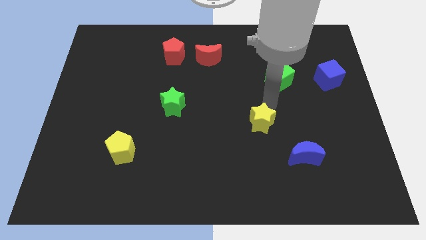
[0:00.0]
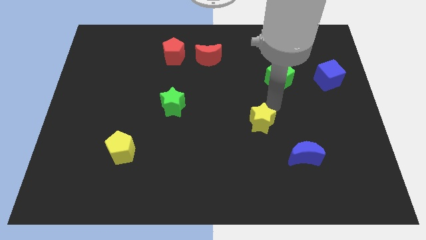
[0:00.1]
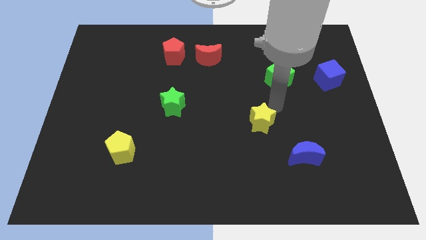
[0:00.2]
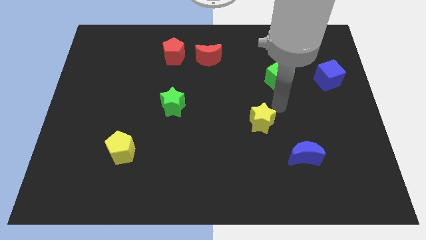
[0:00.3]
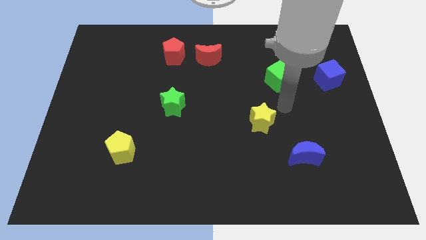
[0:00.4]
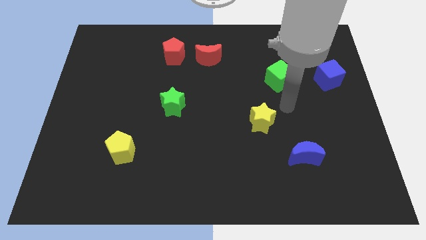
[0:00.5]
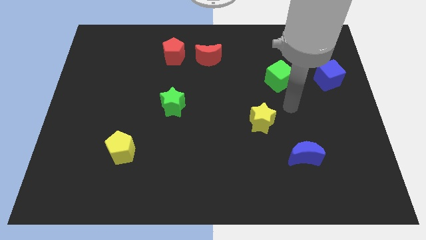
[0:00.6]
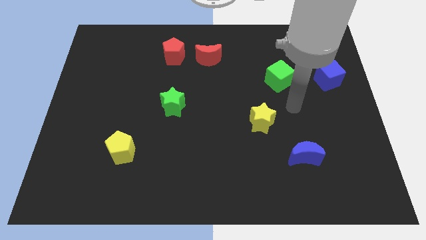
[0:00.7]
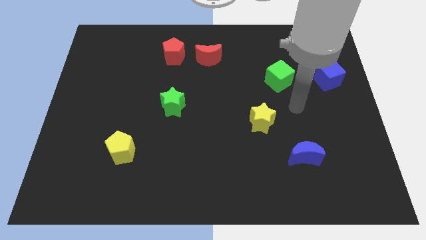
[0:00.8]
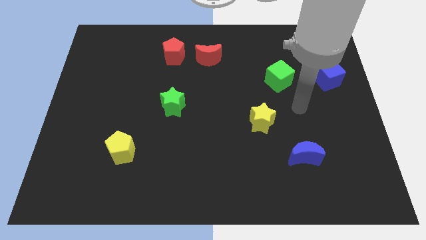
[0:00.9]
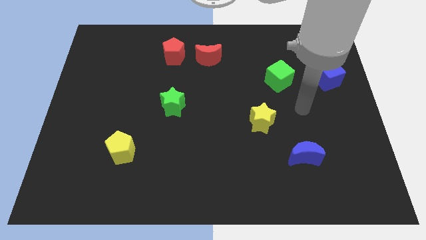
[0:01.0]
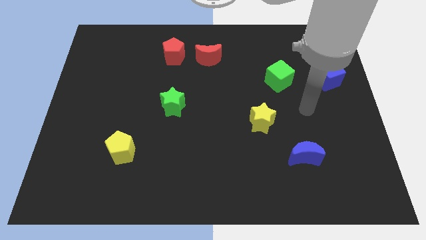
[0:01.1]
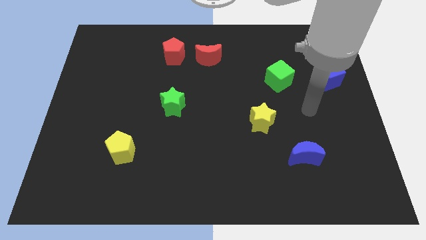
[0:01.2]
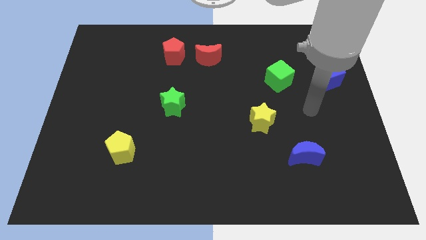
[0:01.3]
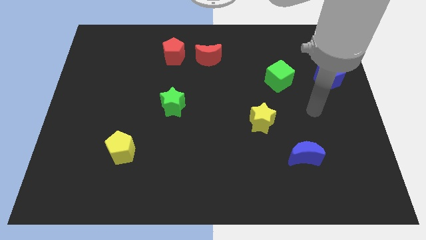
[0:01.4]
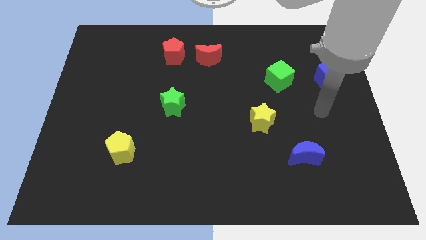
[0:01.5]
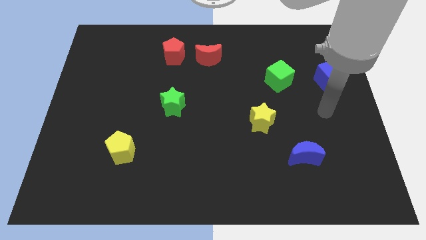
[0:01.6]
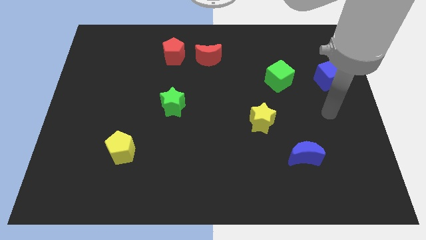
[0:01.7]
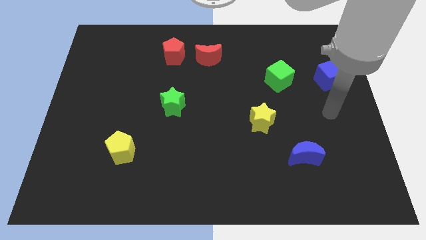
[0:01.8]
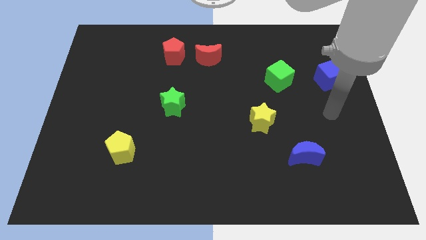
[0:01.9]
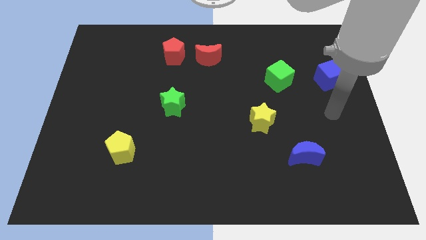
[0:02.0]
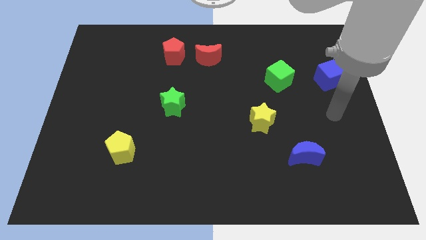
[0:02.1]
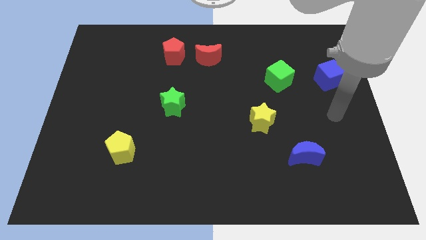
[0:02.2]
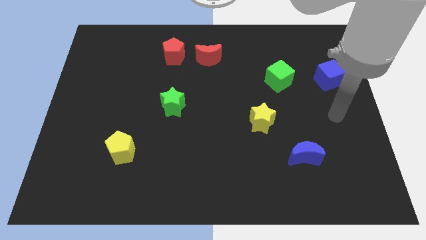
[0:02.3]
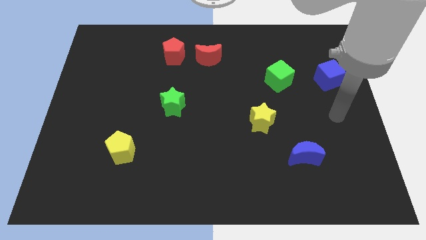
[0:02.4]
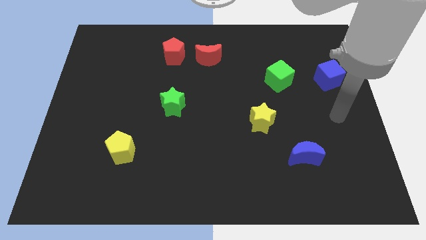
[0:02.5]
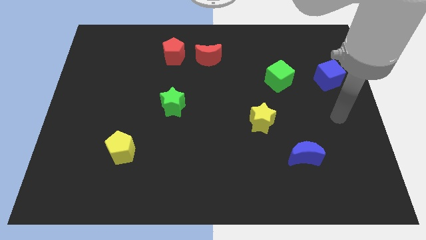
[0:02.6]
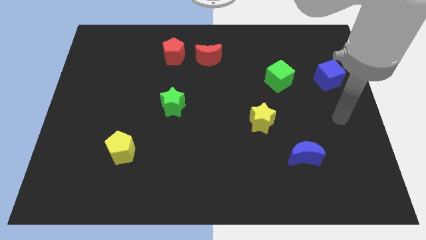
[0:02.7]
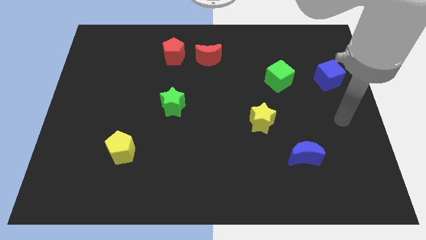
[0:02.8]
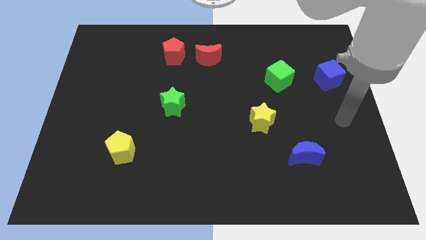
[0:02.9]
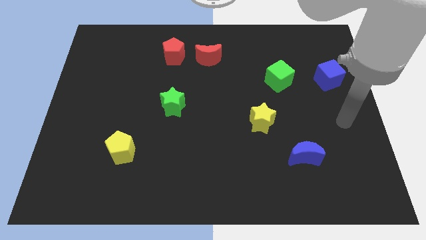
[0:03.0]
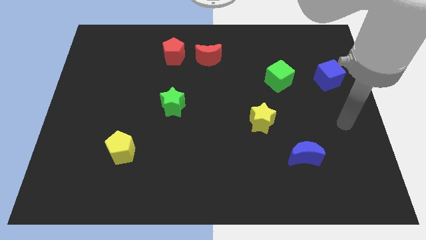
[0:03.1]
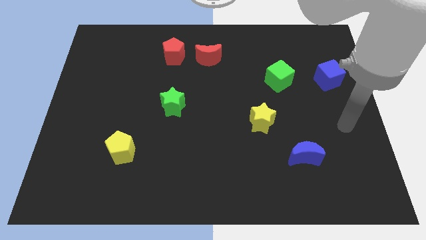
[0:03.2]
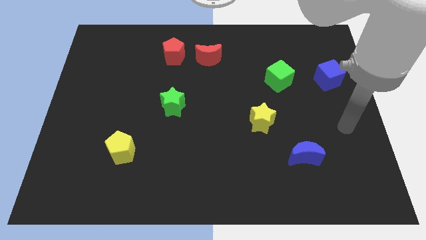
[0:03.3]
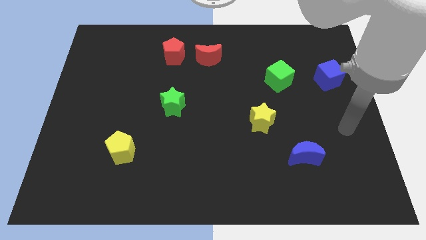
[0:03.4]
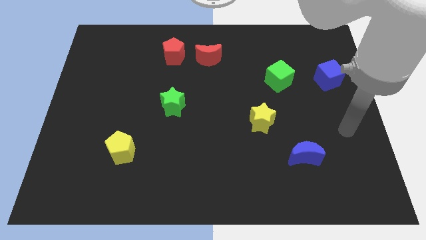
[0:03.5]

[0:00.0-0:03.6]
put your arm to the right of the yellow star

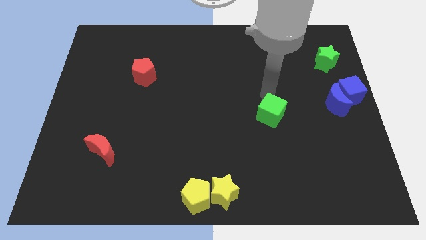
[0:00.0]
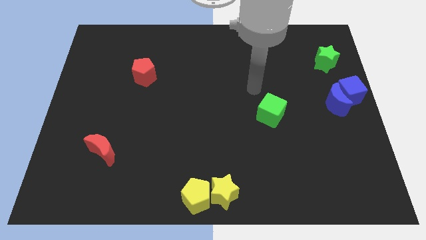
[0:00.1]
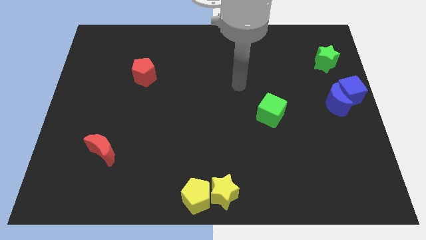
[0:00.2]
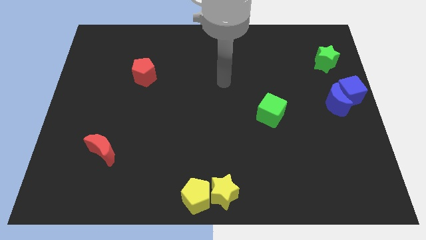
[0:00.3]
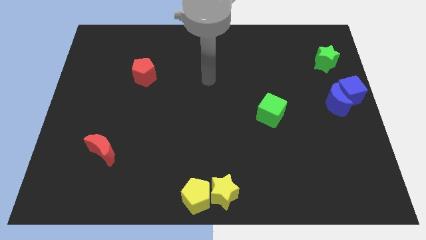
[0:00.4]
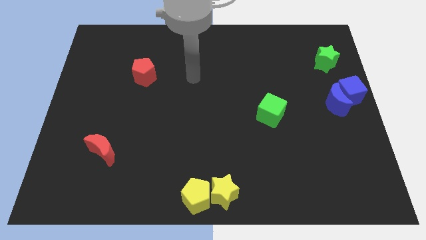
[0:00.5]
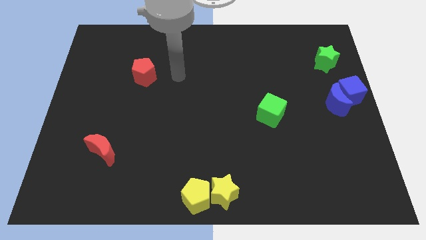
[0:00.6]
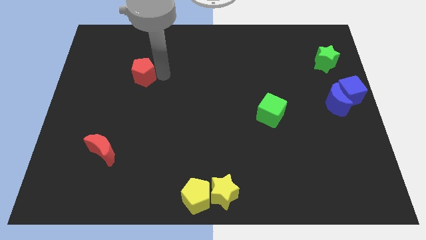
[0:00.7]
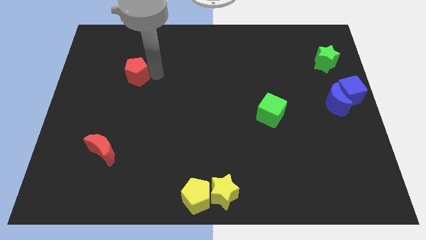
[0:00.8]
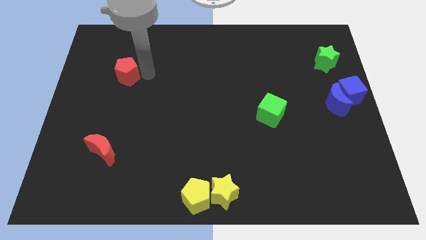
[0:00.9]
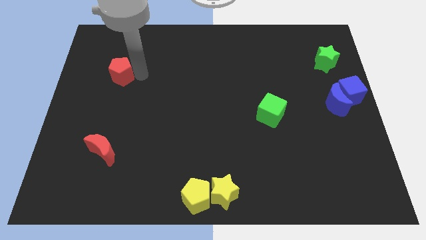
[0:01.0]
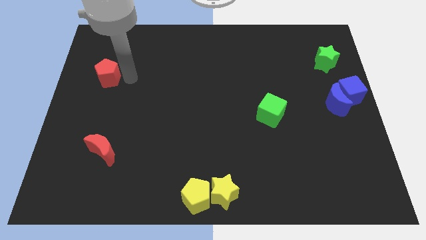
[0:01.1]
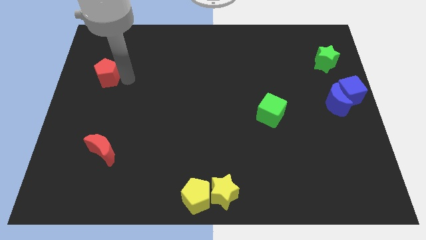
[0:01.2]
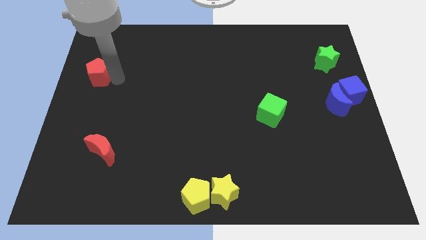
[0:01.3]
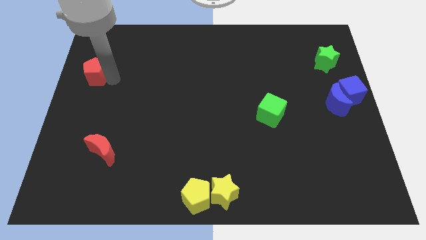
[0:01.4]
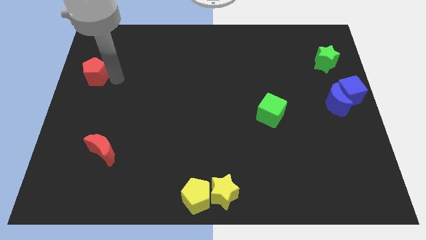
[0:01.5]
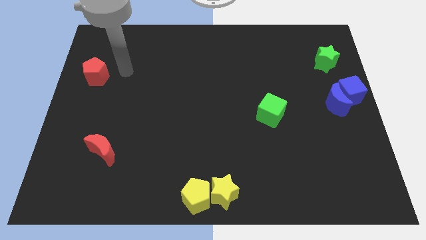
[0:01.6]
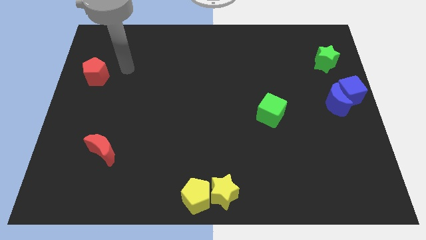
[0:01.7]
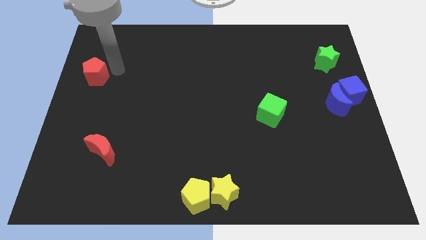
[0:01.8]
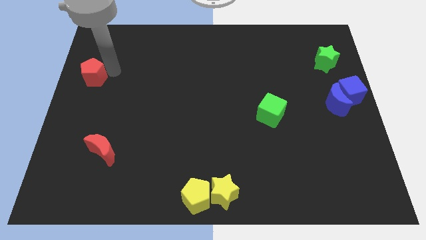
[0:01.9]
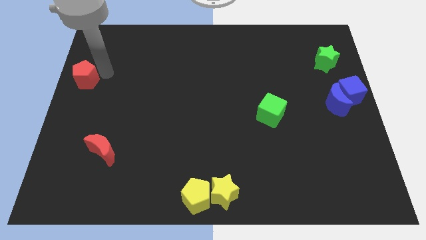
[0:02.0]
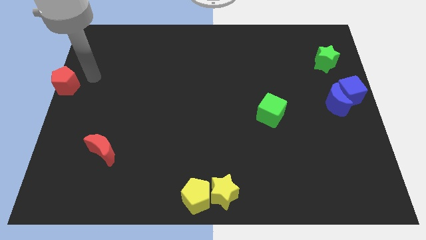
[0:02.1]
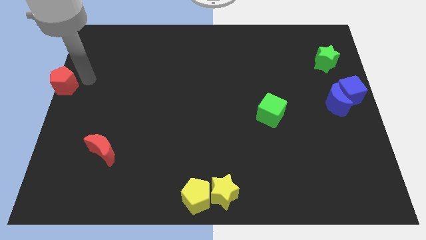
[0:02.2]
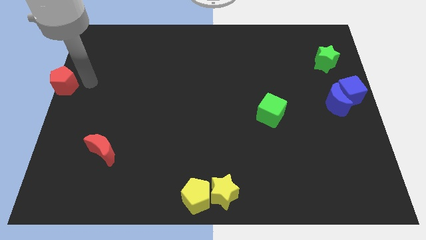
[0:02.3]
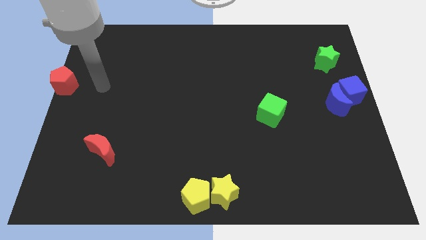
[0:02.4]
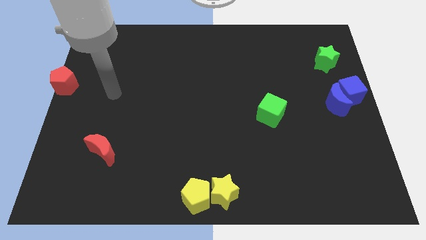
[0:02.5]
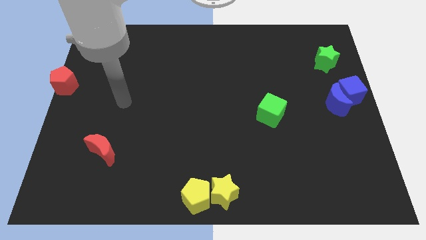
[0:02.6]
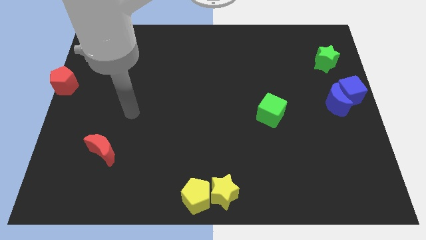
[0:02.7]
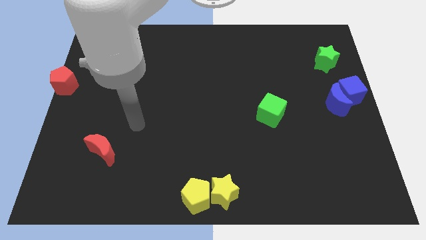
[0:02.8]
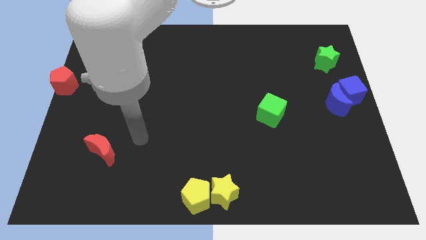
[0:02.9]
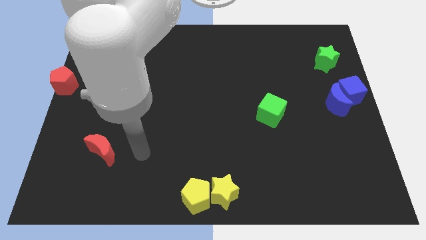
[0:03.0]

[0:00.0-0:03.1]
place the red pentagon at the left side of the board

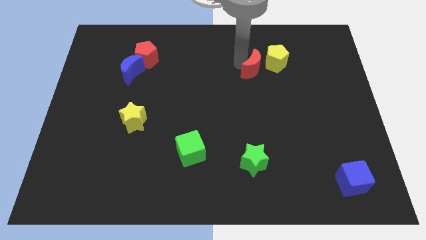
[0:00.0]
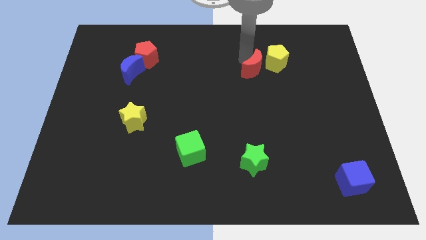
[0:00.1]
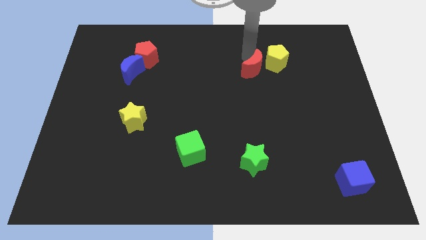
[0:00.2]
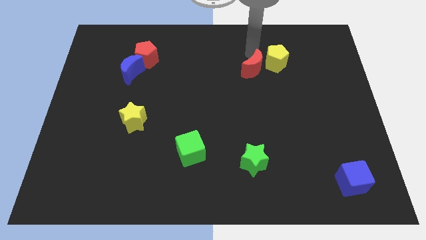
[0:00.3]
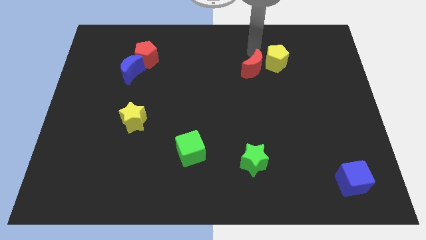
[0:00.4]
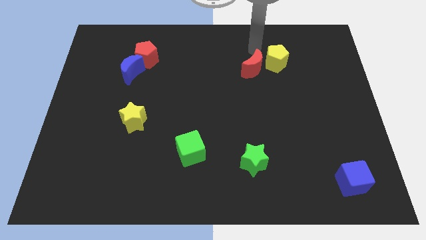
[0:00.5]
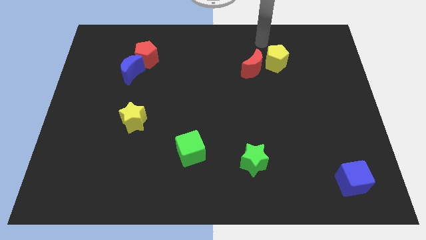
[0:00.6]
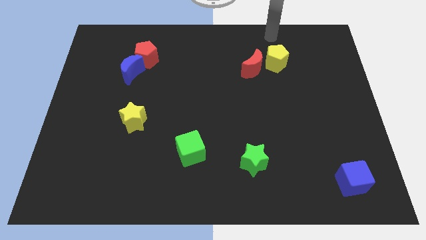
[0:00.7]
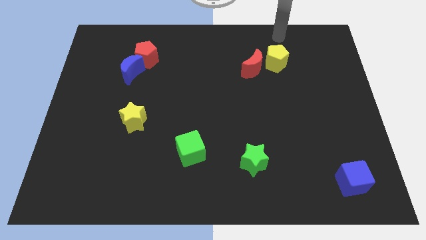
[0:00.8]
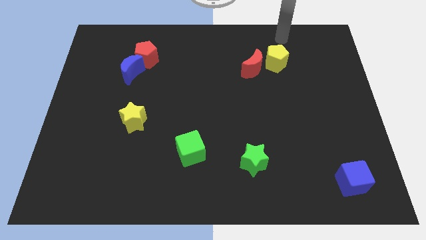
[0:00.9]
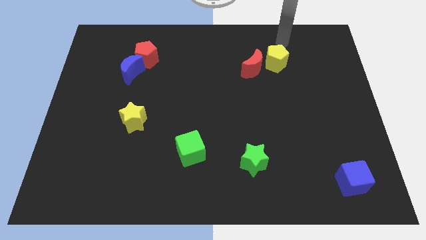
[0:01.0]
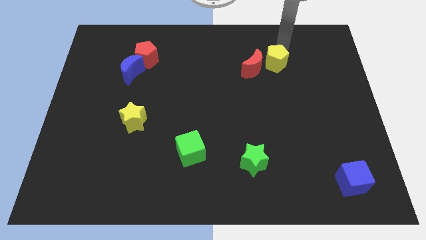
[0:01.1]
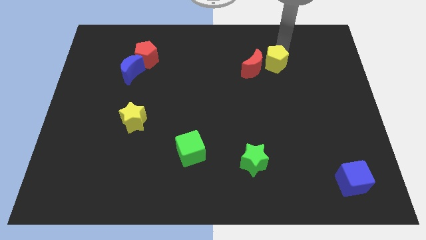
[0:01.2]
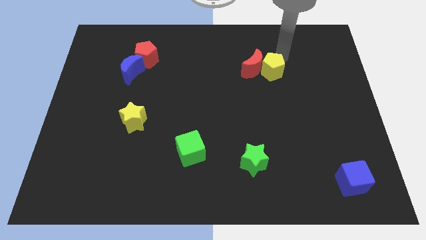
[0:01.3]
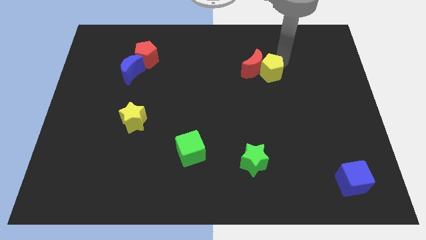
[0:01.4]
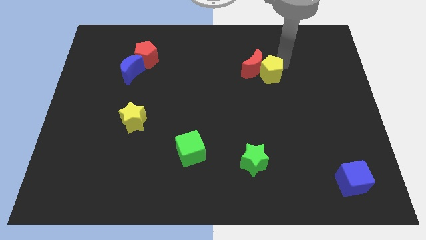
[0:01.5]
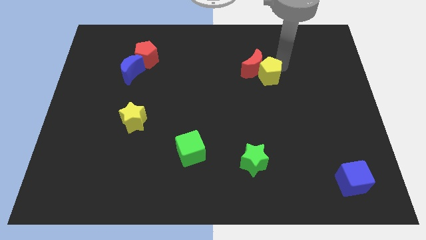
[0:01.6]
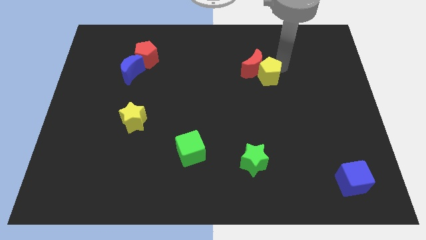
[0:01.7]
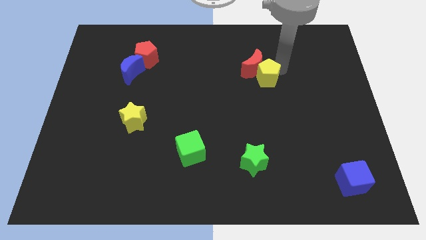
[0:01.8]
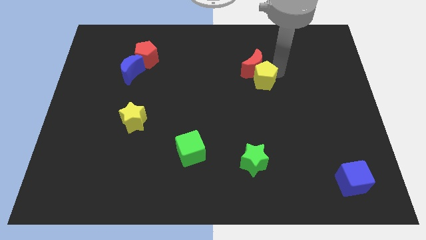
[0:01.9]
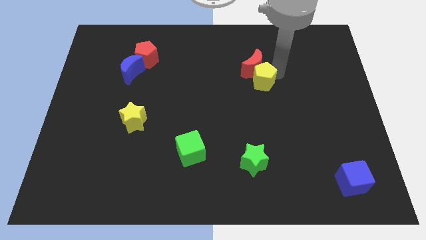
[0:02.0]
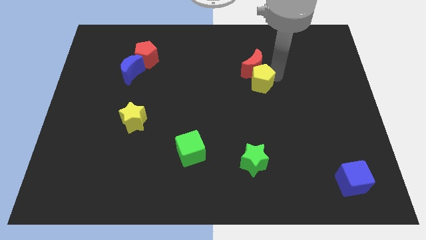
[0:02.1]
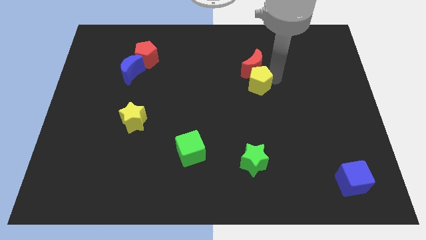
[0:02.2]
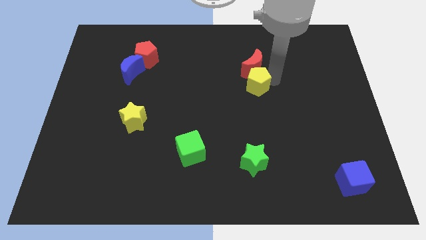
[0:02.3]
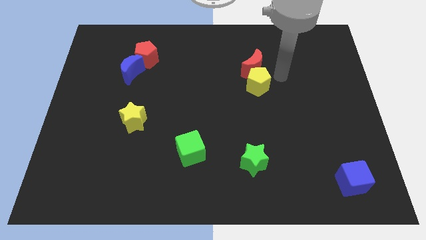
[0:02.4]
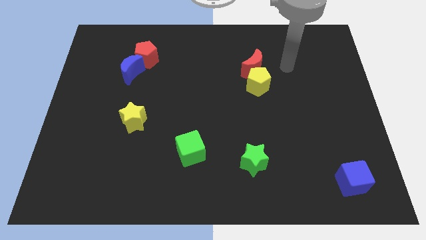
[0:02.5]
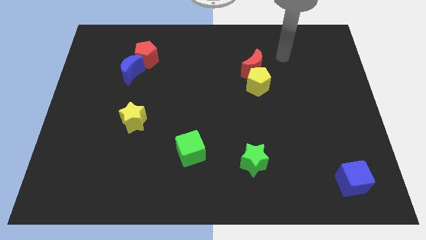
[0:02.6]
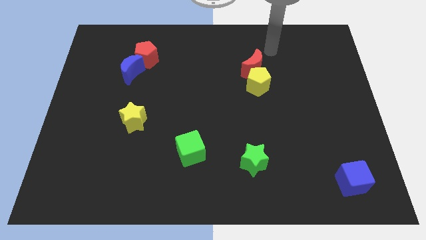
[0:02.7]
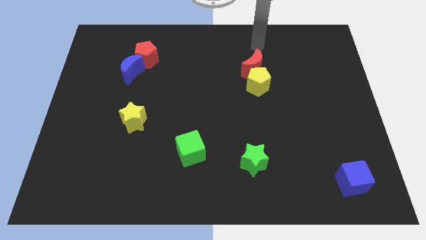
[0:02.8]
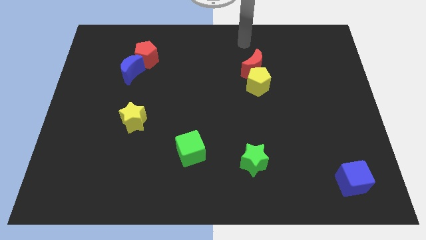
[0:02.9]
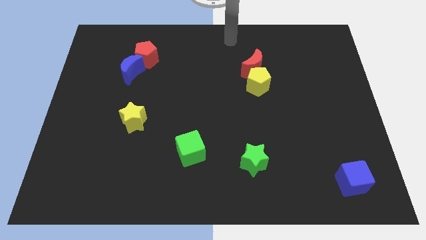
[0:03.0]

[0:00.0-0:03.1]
place the yellow pentagon at the bottom side of the red moon
